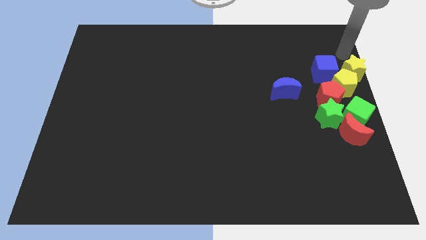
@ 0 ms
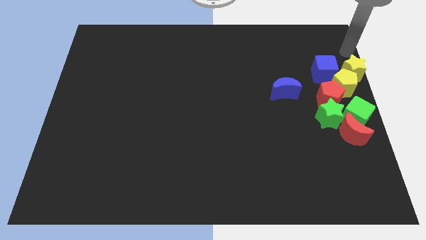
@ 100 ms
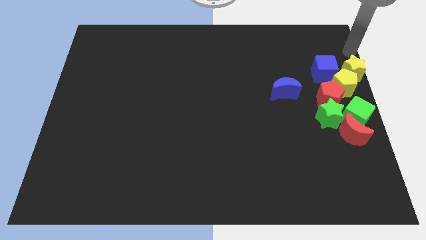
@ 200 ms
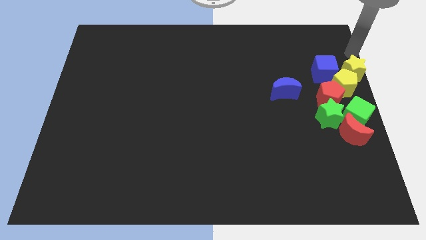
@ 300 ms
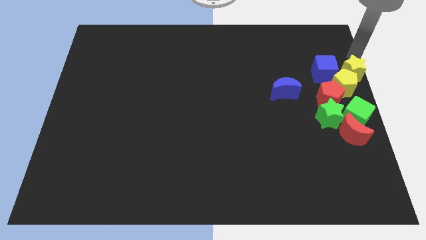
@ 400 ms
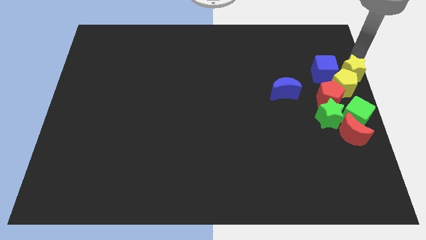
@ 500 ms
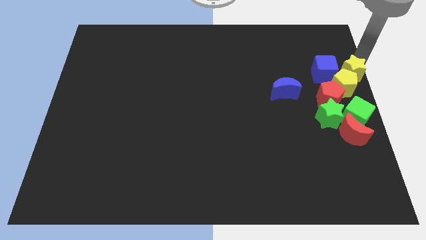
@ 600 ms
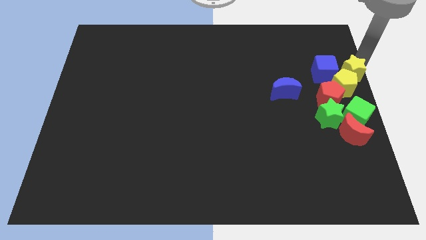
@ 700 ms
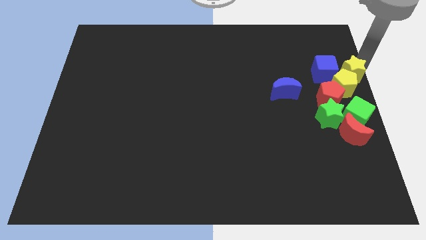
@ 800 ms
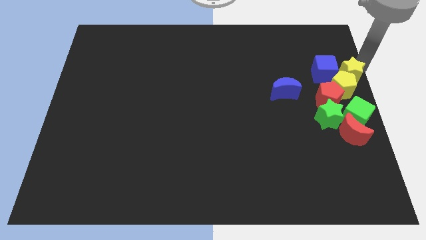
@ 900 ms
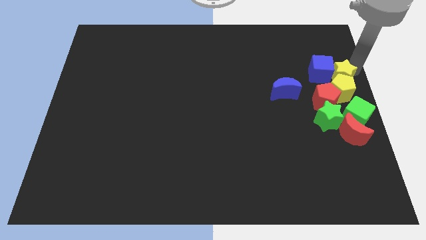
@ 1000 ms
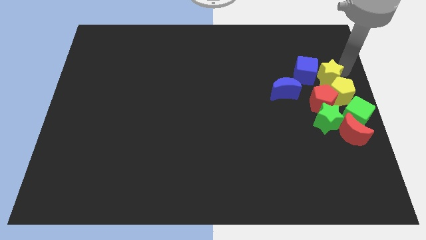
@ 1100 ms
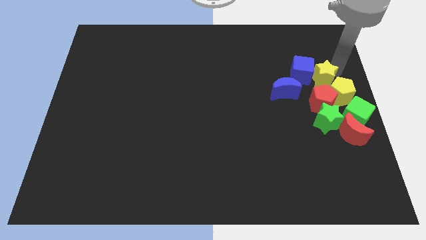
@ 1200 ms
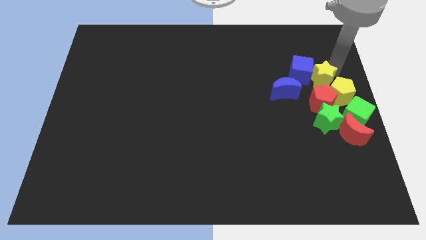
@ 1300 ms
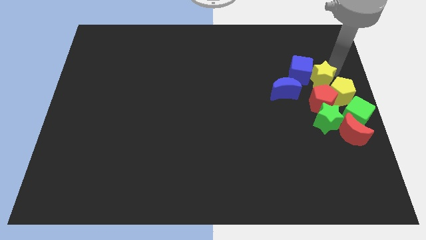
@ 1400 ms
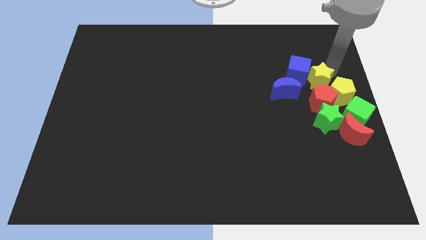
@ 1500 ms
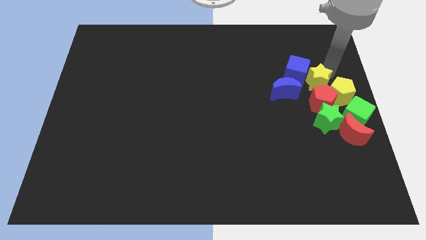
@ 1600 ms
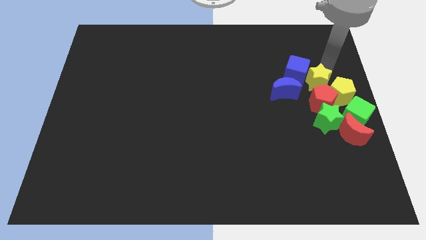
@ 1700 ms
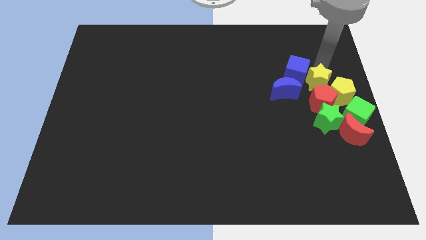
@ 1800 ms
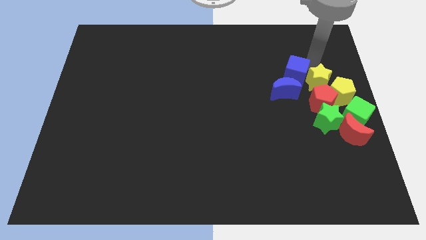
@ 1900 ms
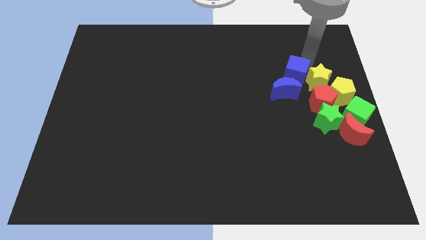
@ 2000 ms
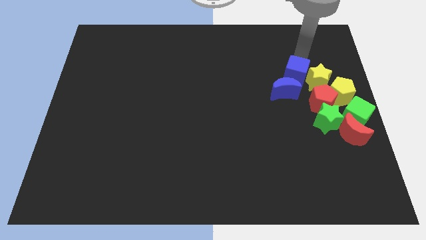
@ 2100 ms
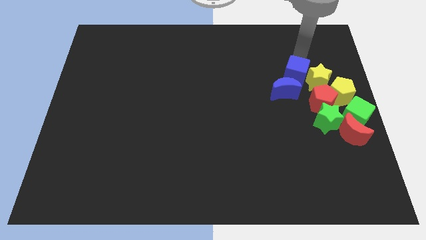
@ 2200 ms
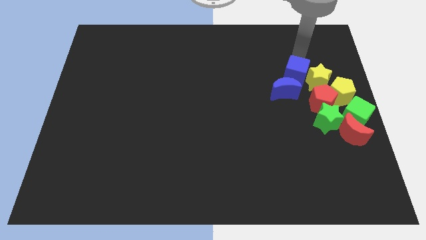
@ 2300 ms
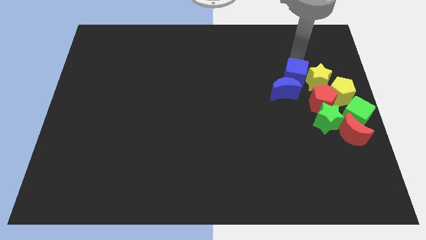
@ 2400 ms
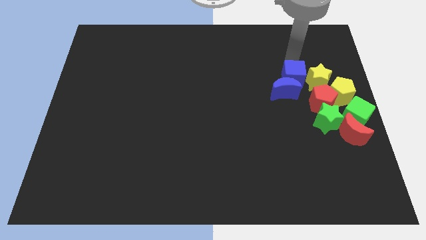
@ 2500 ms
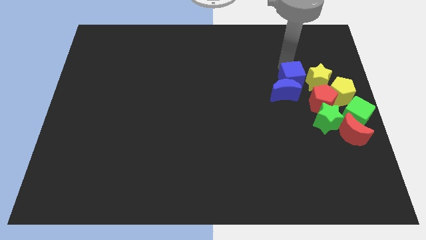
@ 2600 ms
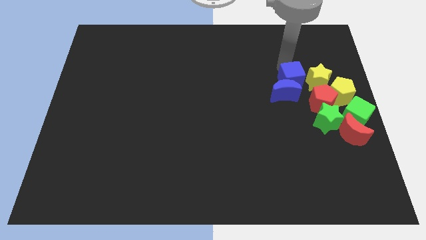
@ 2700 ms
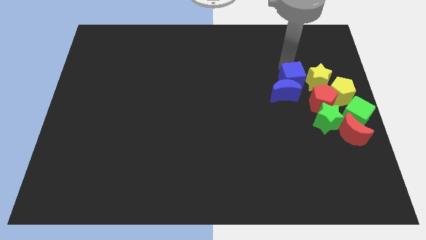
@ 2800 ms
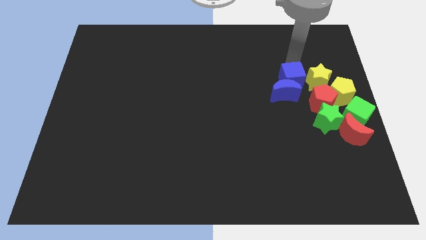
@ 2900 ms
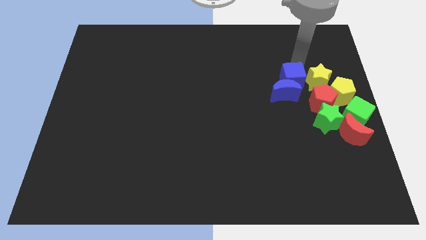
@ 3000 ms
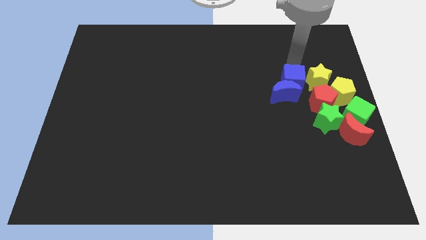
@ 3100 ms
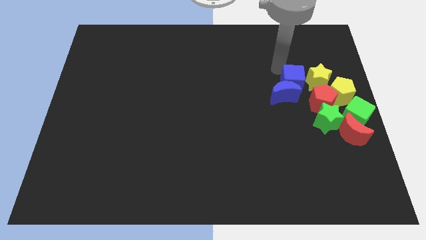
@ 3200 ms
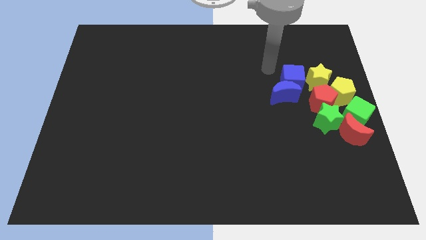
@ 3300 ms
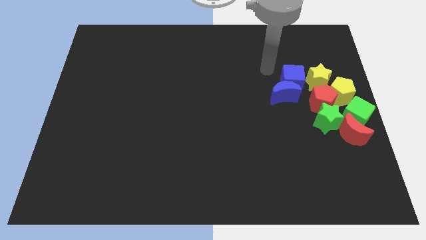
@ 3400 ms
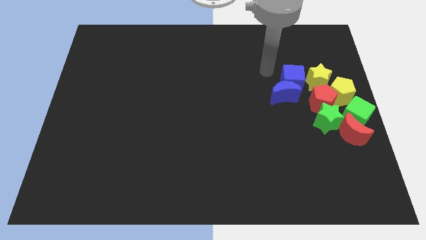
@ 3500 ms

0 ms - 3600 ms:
push blue cube above the blue moon

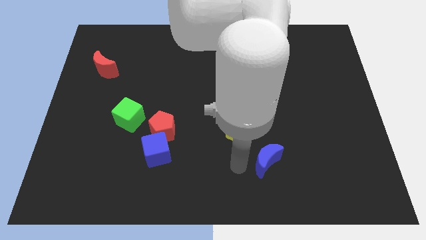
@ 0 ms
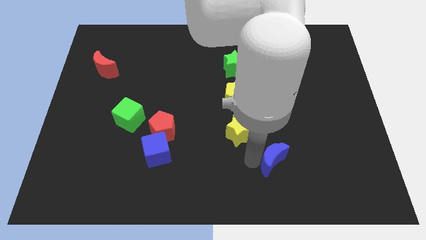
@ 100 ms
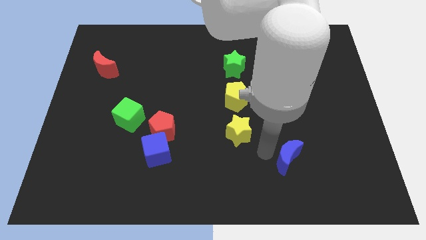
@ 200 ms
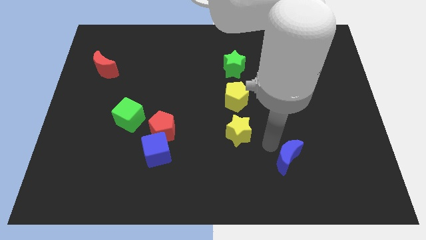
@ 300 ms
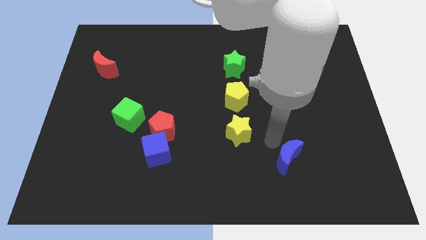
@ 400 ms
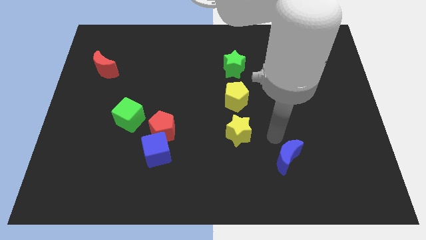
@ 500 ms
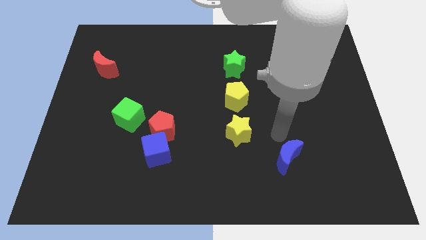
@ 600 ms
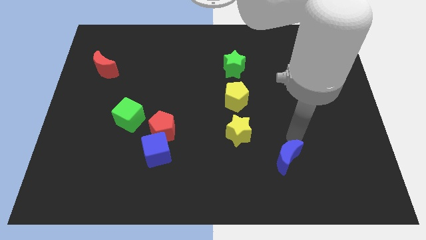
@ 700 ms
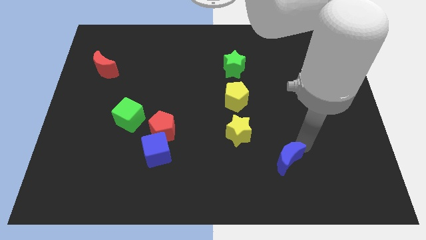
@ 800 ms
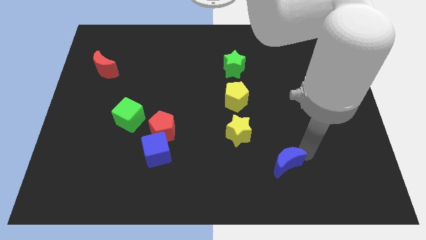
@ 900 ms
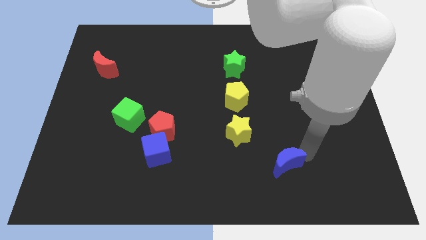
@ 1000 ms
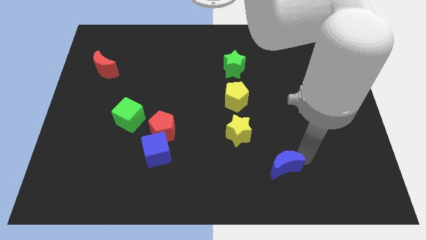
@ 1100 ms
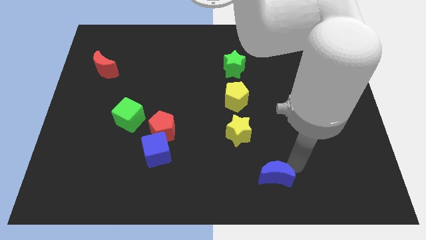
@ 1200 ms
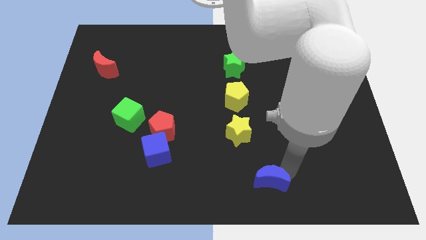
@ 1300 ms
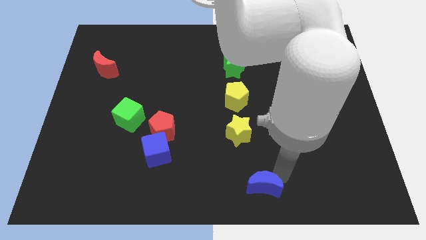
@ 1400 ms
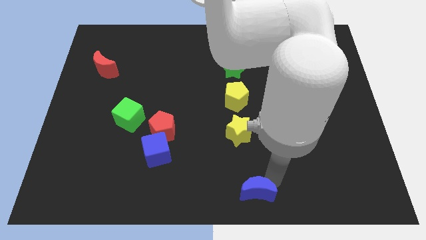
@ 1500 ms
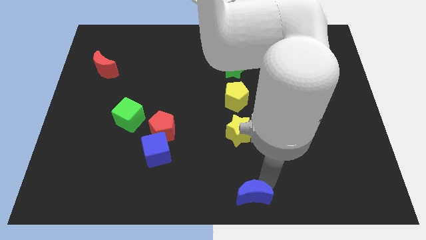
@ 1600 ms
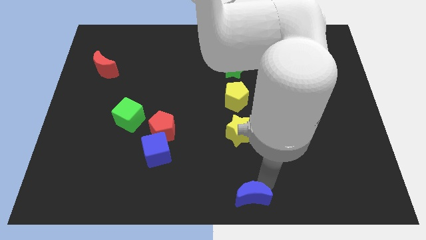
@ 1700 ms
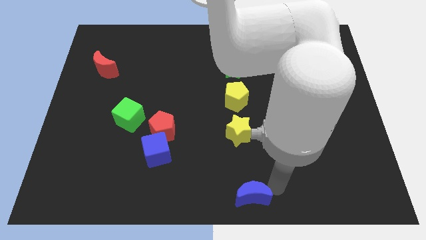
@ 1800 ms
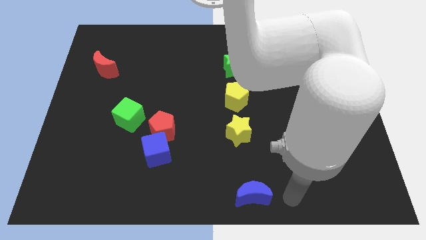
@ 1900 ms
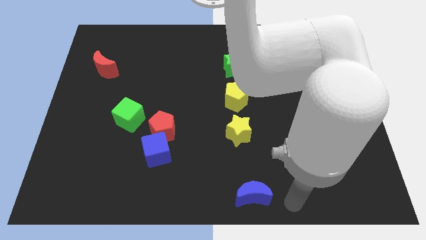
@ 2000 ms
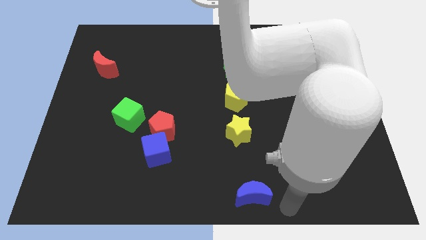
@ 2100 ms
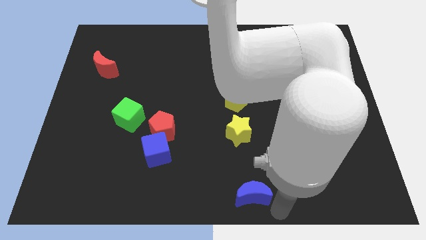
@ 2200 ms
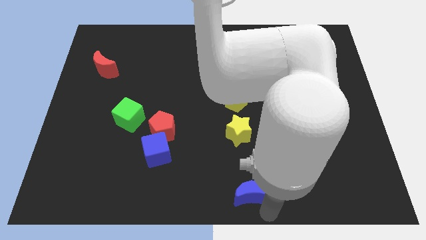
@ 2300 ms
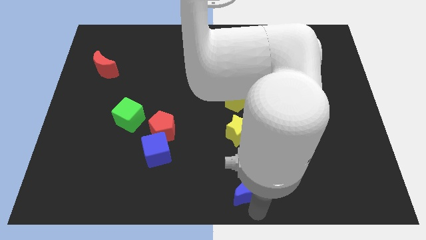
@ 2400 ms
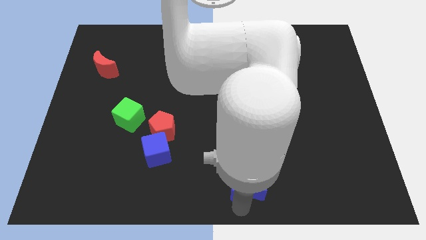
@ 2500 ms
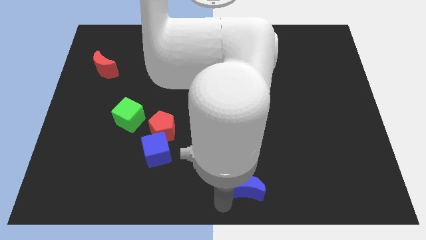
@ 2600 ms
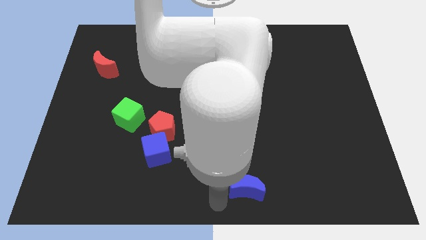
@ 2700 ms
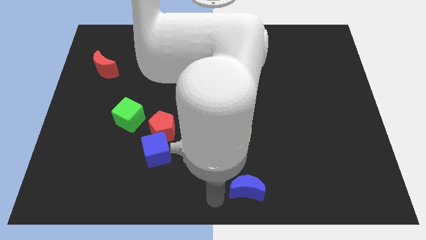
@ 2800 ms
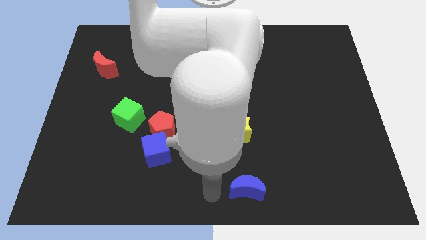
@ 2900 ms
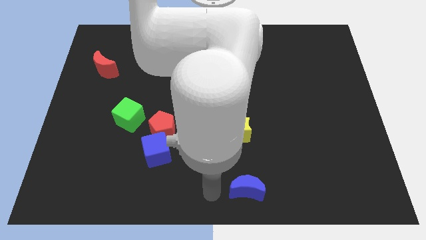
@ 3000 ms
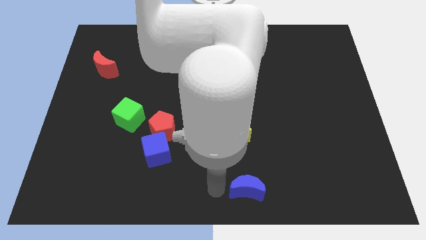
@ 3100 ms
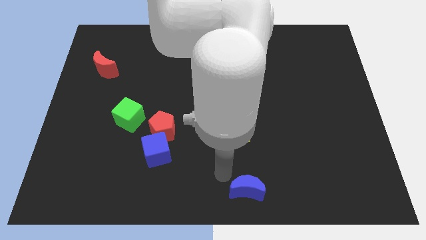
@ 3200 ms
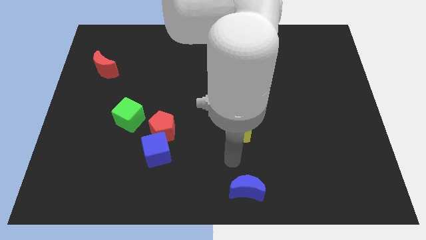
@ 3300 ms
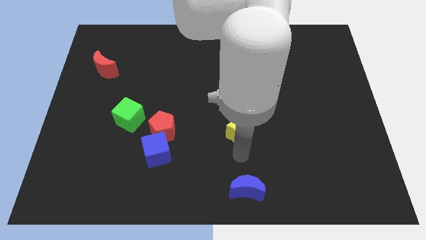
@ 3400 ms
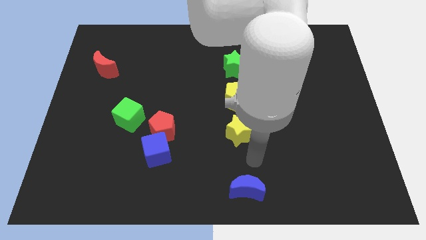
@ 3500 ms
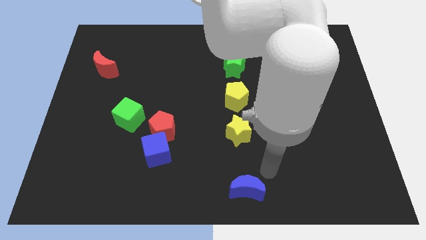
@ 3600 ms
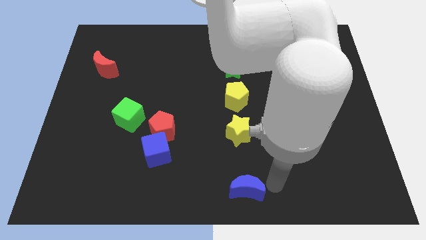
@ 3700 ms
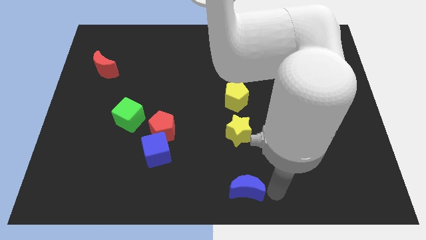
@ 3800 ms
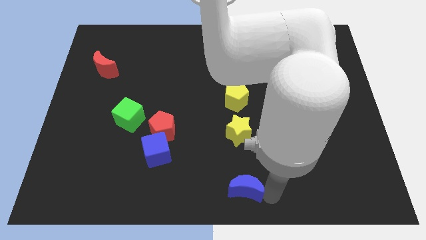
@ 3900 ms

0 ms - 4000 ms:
push the blue crescent to the bottom the yellow star

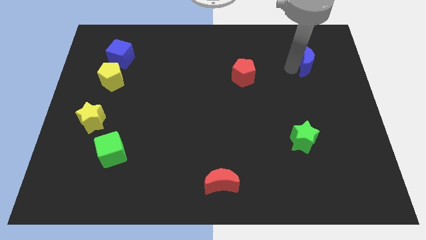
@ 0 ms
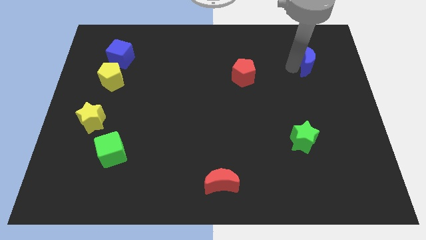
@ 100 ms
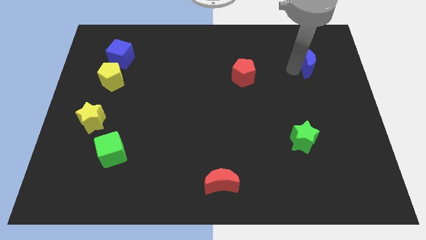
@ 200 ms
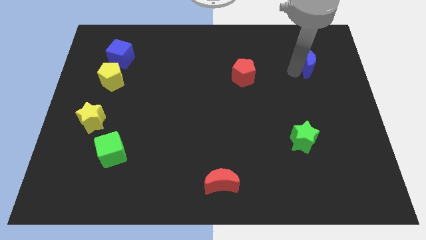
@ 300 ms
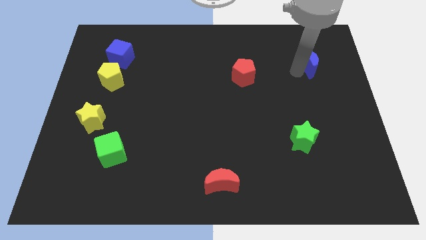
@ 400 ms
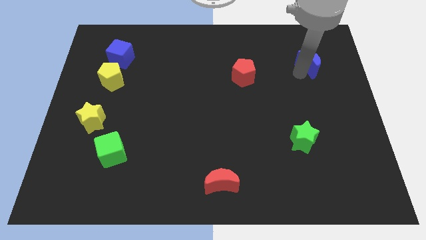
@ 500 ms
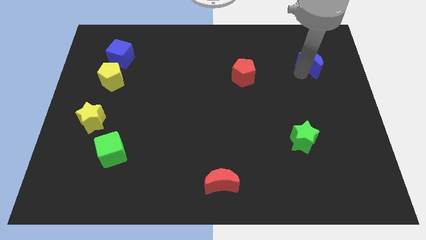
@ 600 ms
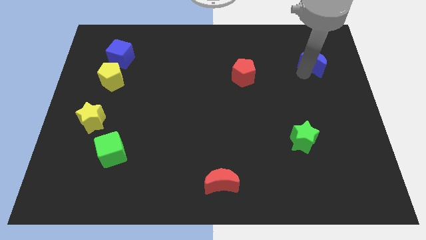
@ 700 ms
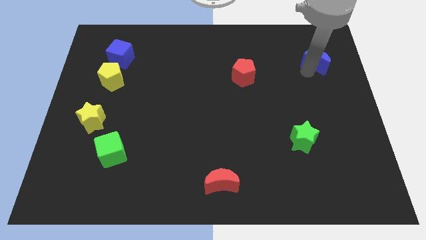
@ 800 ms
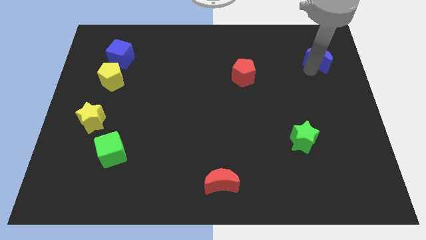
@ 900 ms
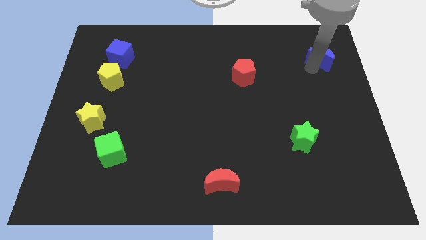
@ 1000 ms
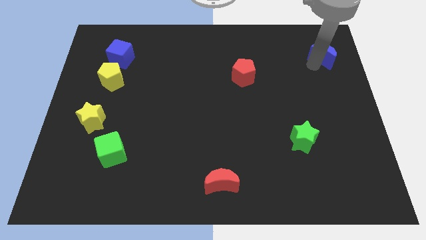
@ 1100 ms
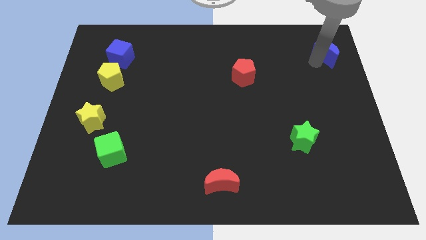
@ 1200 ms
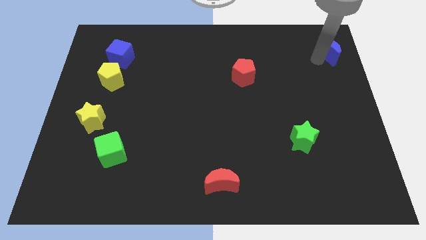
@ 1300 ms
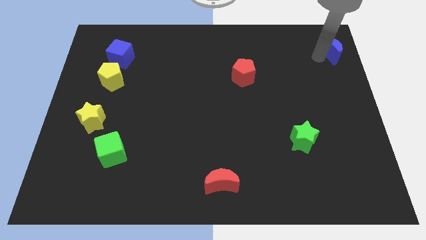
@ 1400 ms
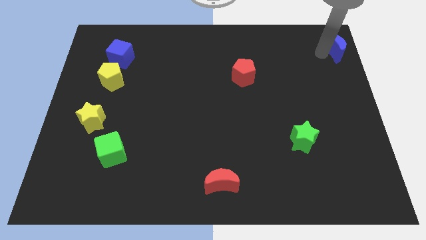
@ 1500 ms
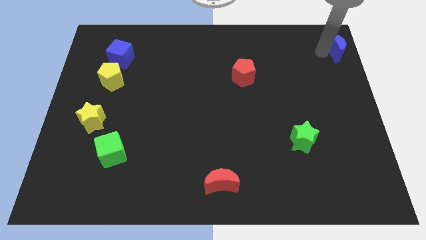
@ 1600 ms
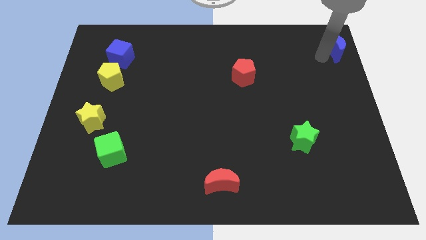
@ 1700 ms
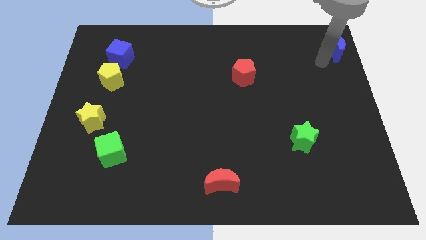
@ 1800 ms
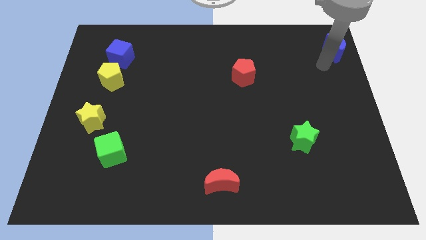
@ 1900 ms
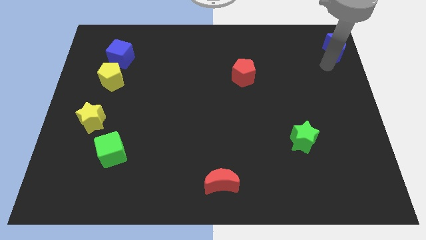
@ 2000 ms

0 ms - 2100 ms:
push the blue moon to the top right corner of the board
